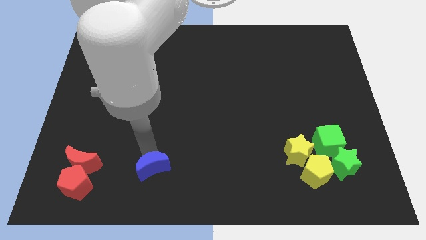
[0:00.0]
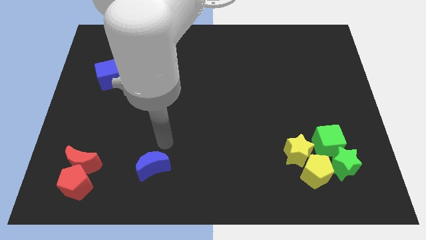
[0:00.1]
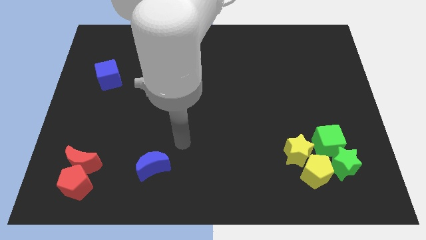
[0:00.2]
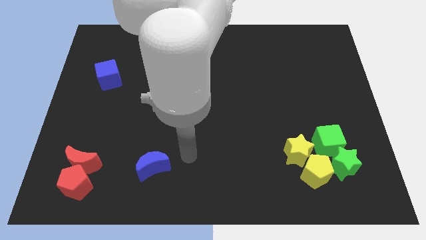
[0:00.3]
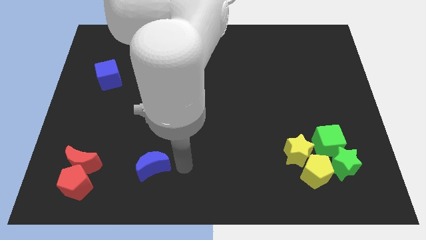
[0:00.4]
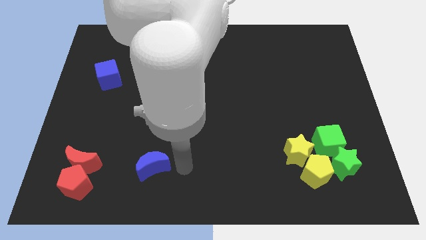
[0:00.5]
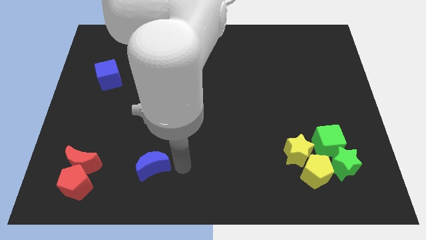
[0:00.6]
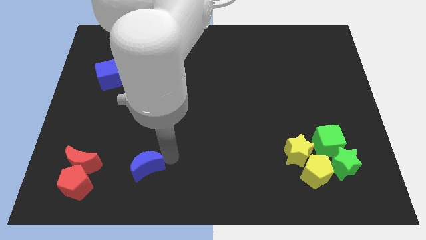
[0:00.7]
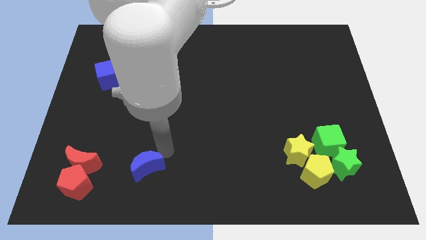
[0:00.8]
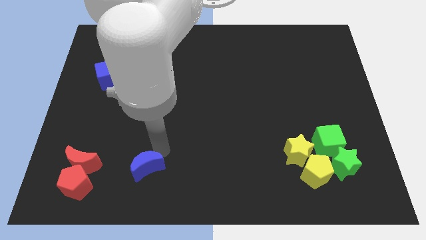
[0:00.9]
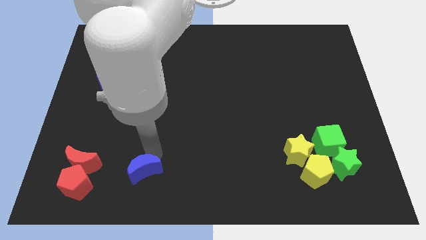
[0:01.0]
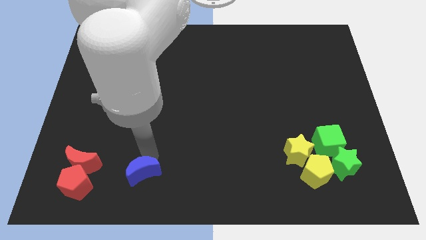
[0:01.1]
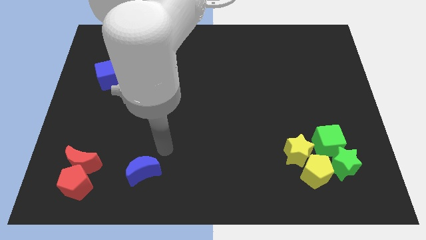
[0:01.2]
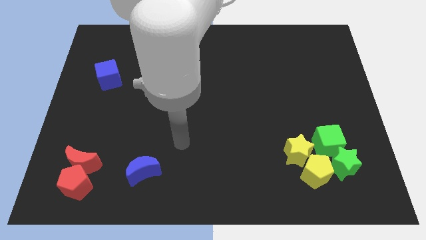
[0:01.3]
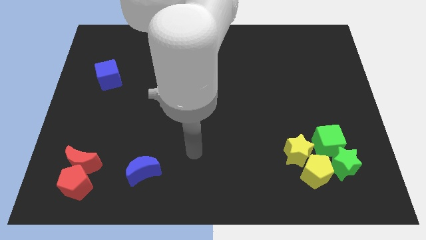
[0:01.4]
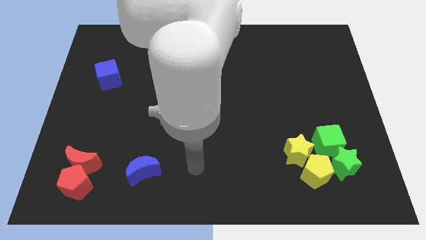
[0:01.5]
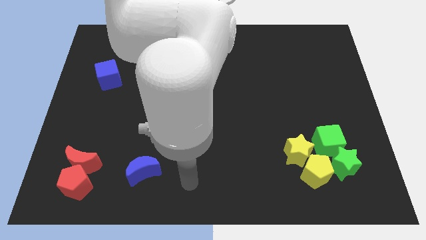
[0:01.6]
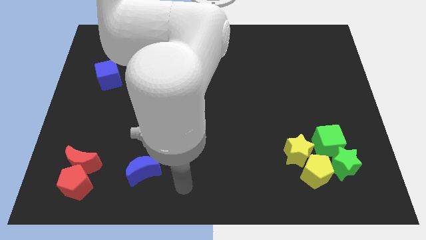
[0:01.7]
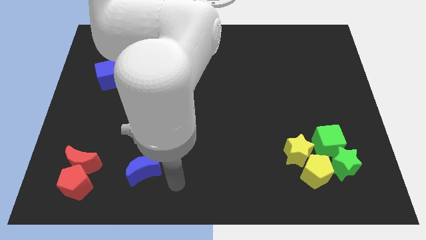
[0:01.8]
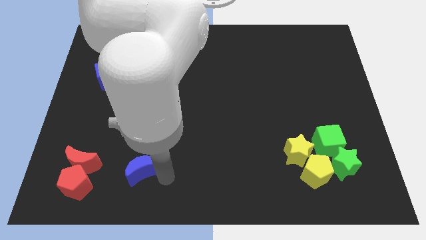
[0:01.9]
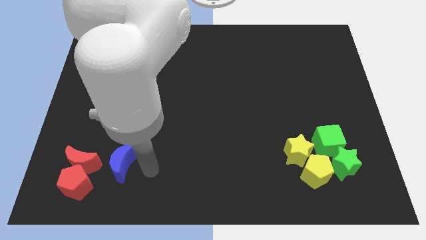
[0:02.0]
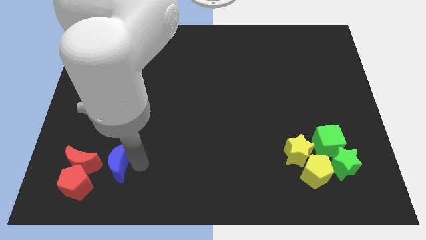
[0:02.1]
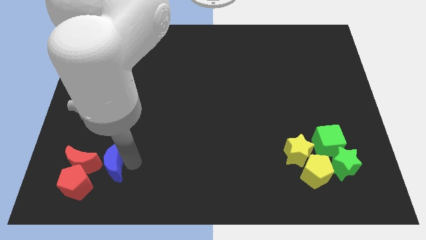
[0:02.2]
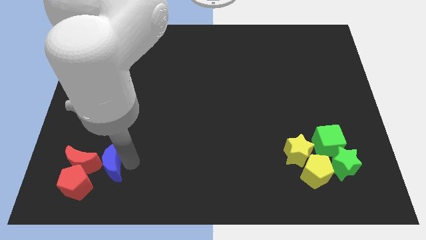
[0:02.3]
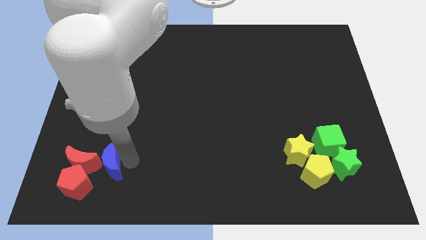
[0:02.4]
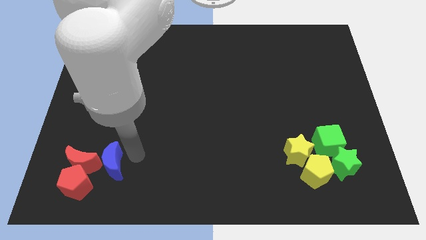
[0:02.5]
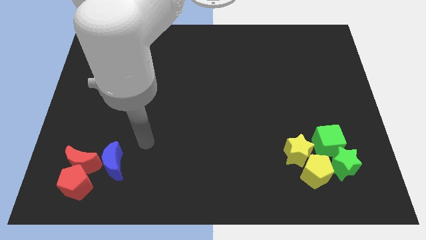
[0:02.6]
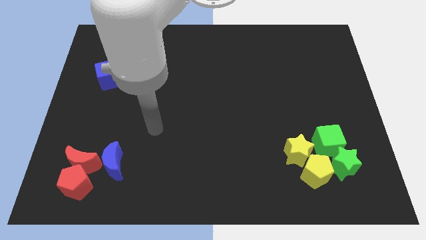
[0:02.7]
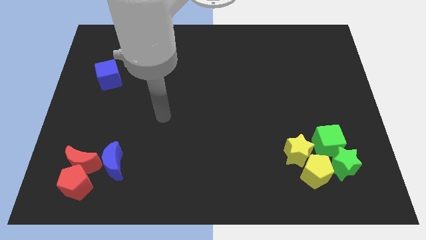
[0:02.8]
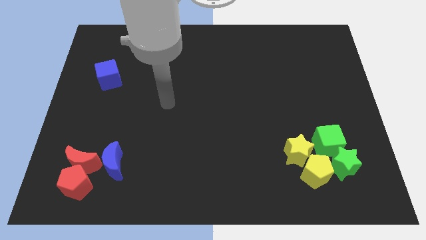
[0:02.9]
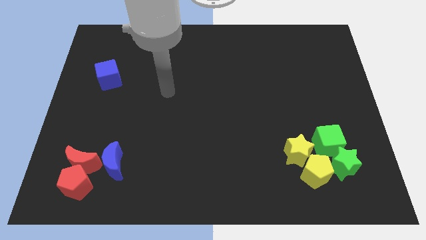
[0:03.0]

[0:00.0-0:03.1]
push the blue crescent close to red crescent

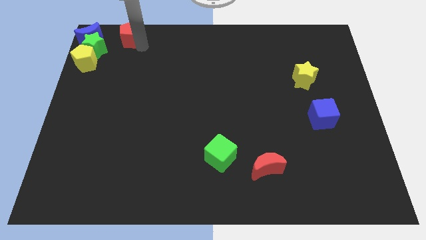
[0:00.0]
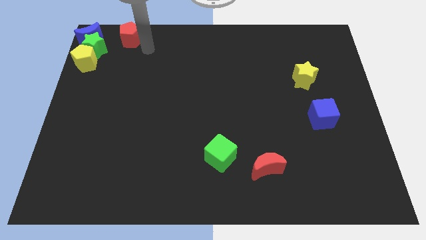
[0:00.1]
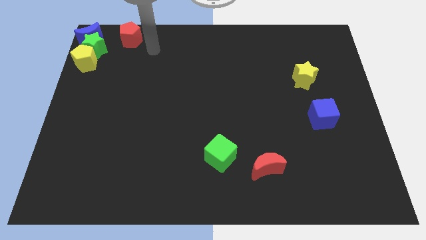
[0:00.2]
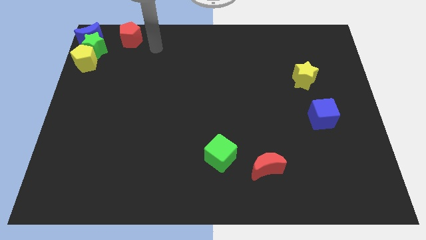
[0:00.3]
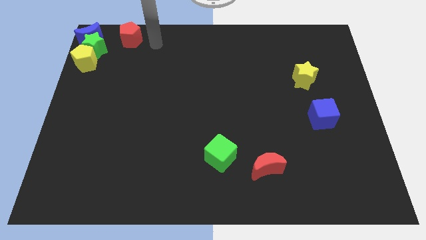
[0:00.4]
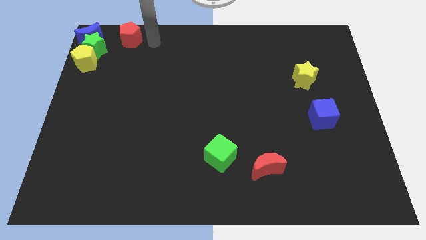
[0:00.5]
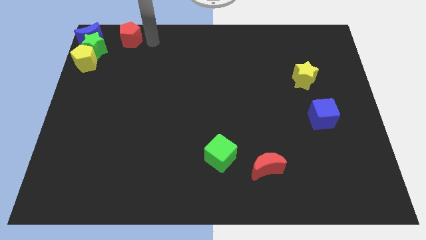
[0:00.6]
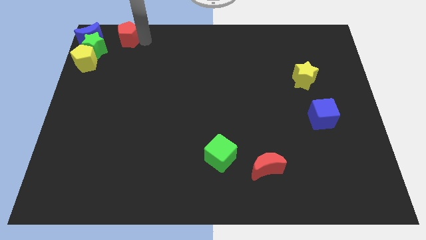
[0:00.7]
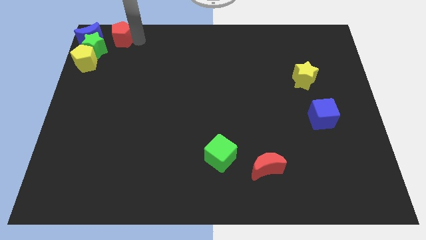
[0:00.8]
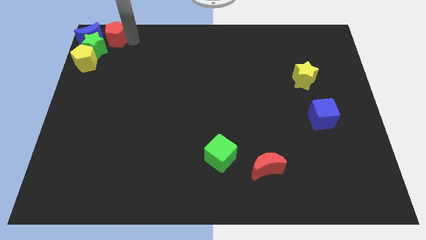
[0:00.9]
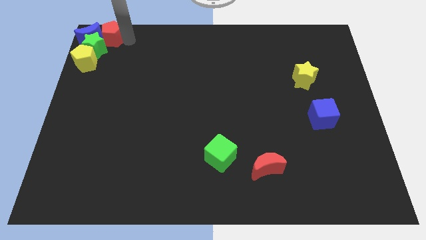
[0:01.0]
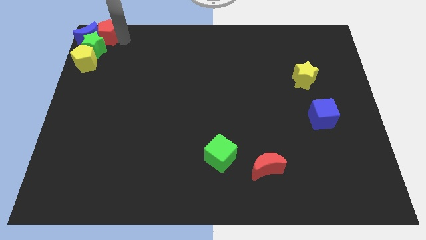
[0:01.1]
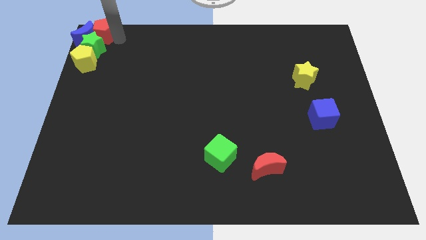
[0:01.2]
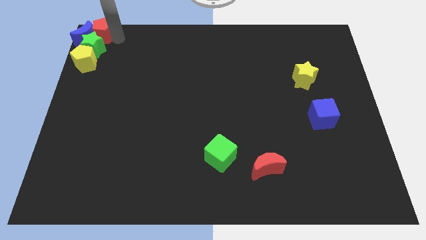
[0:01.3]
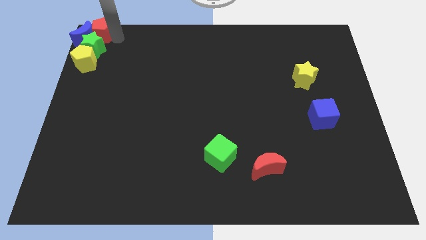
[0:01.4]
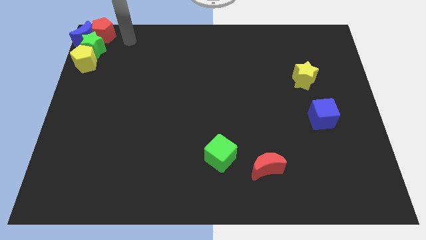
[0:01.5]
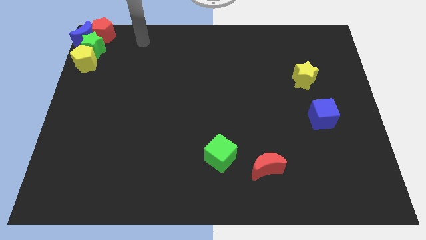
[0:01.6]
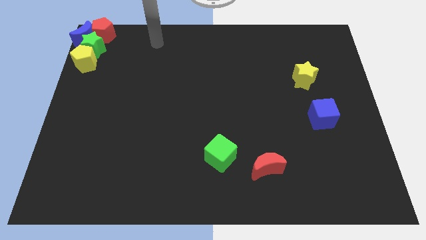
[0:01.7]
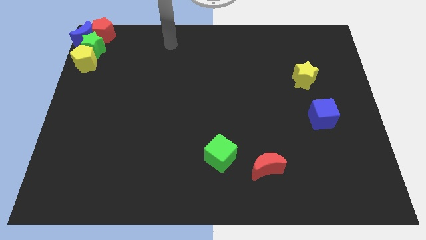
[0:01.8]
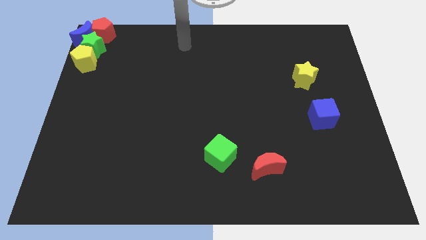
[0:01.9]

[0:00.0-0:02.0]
move the red pentagon to the right side of the blue crescent

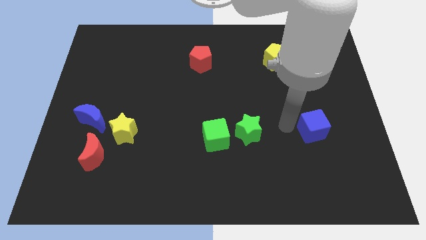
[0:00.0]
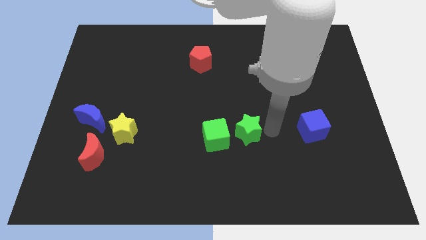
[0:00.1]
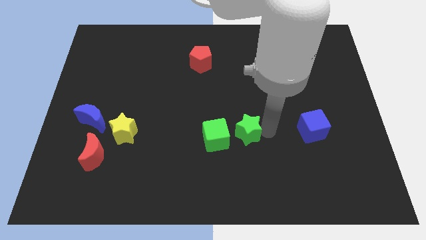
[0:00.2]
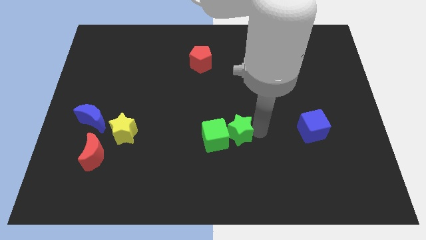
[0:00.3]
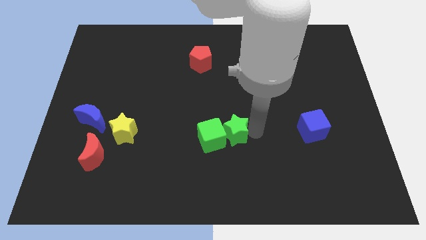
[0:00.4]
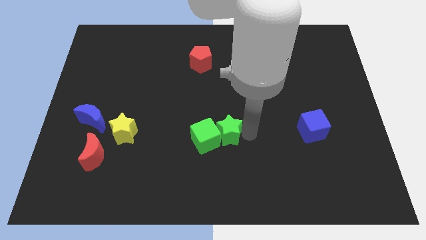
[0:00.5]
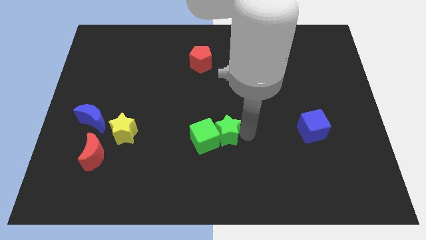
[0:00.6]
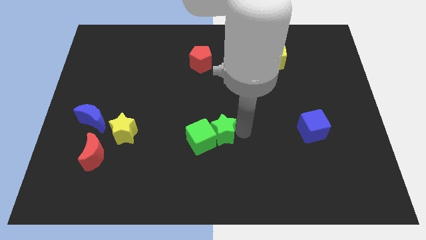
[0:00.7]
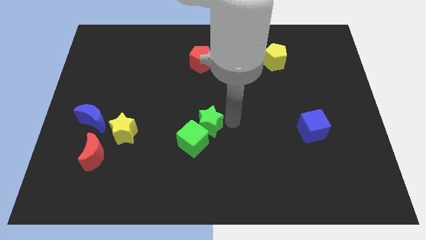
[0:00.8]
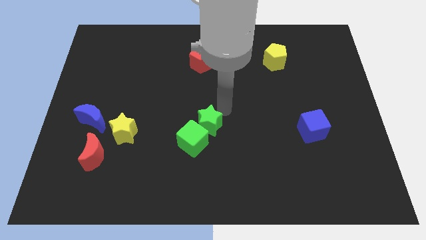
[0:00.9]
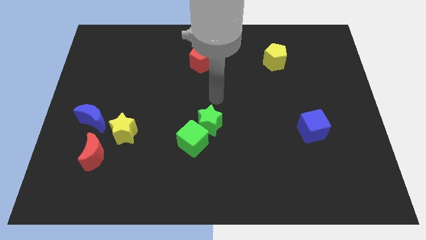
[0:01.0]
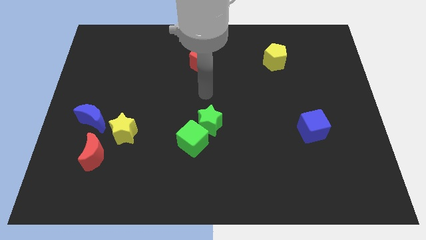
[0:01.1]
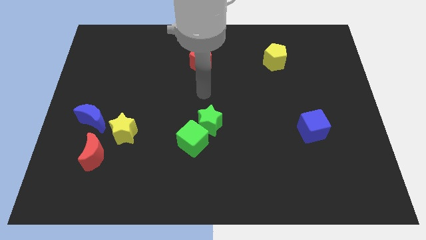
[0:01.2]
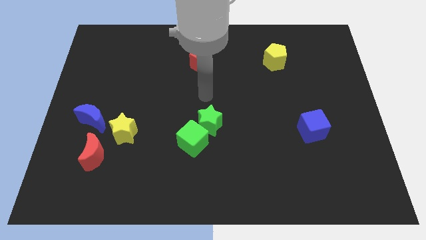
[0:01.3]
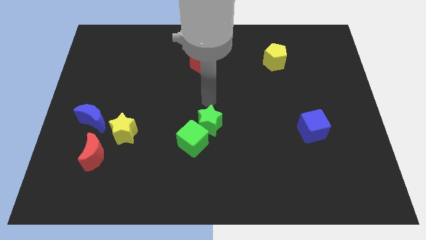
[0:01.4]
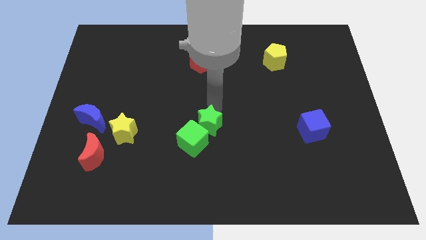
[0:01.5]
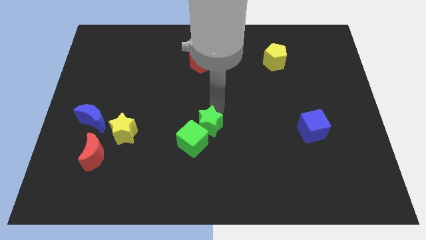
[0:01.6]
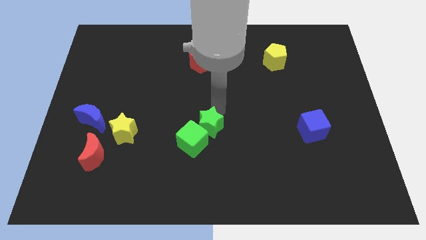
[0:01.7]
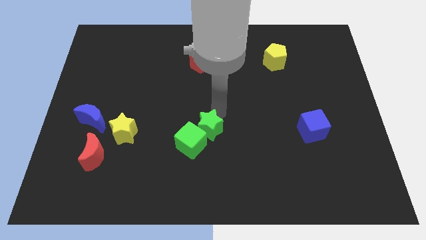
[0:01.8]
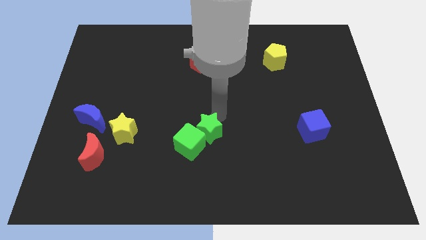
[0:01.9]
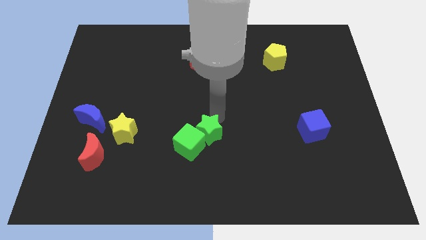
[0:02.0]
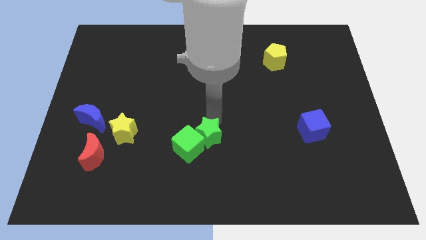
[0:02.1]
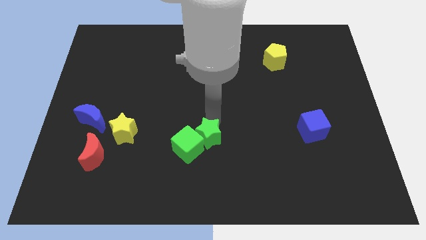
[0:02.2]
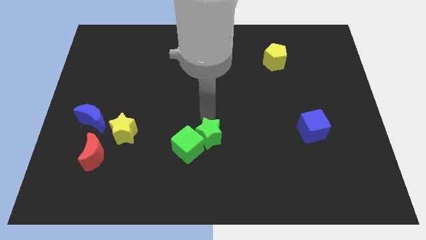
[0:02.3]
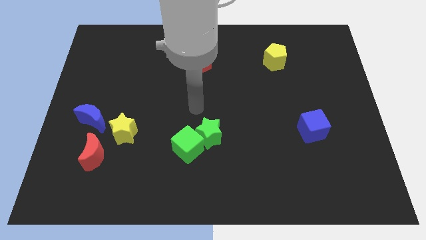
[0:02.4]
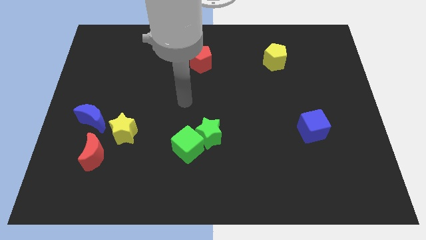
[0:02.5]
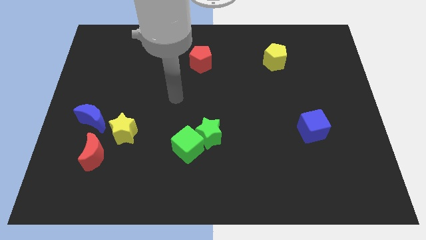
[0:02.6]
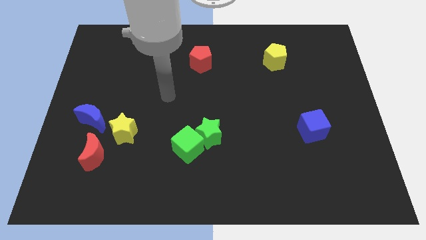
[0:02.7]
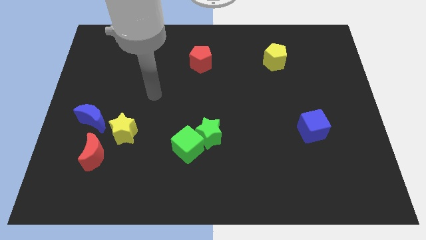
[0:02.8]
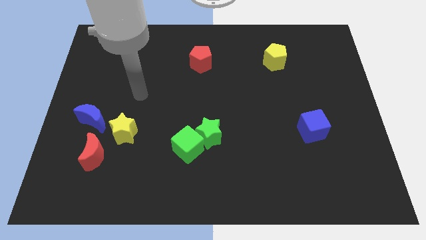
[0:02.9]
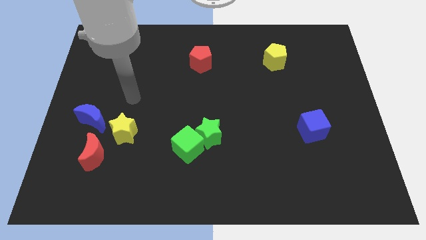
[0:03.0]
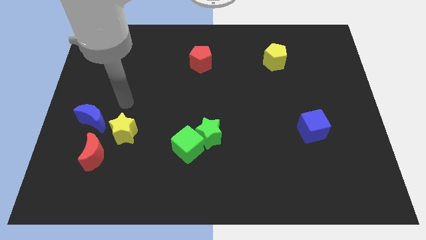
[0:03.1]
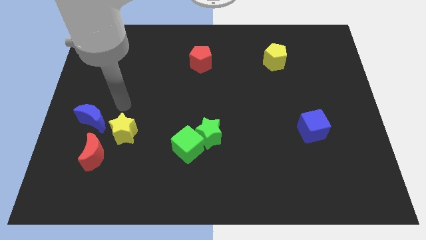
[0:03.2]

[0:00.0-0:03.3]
move the green blocks to the center of the board

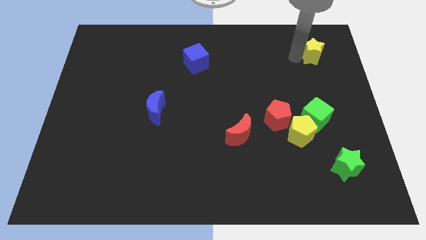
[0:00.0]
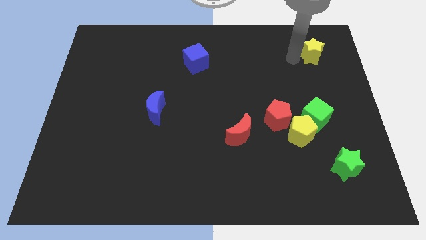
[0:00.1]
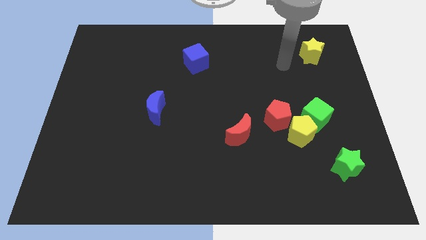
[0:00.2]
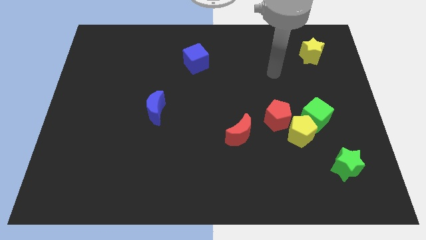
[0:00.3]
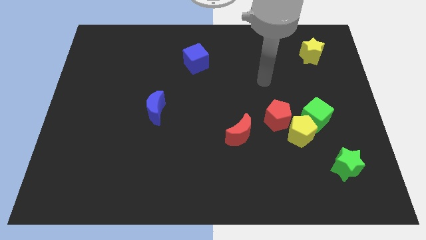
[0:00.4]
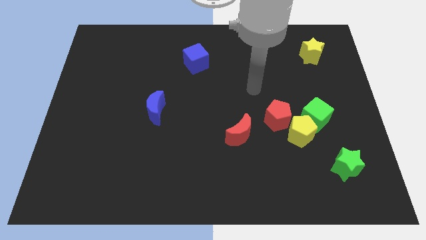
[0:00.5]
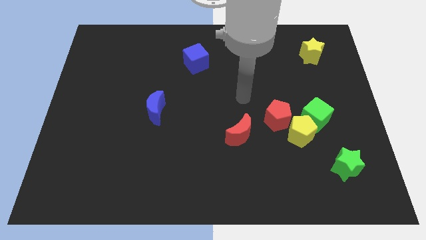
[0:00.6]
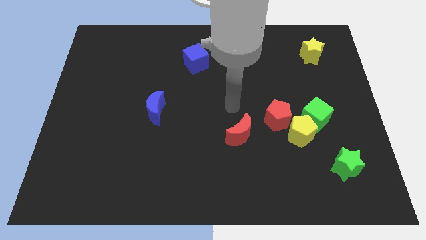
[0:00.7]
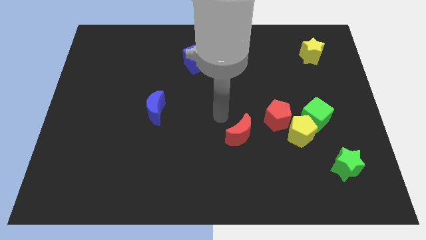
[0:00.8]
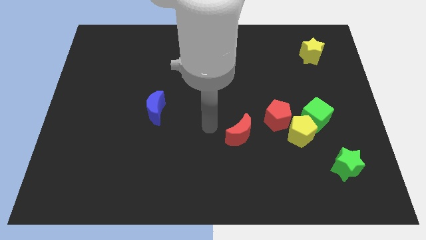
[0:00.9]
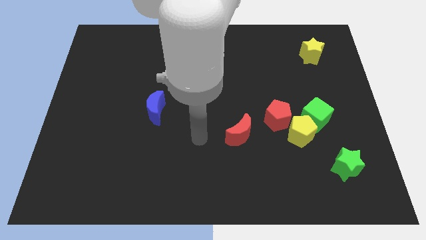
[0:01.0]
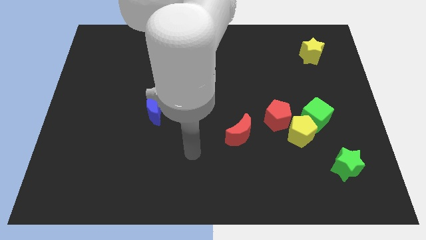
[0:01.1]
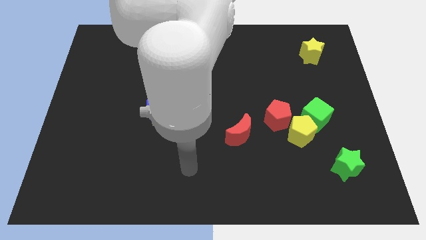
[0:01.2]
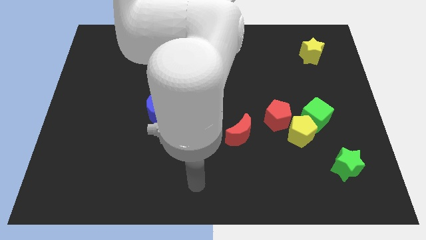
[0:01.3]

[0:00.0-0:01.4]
move the arm away from the yellow star
